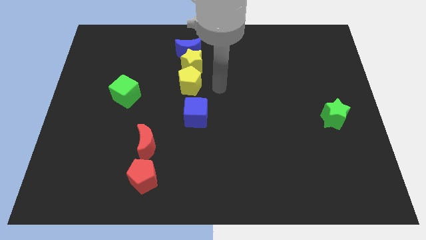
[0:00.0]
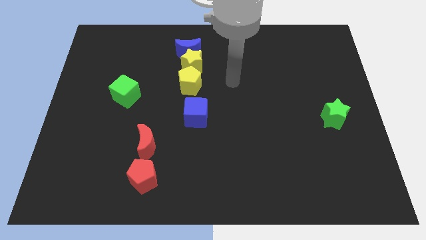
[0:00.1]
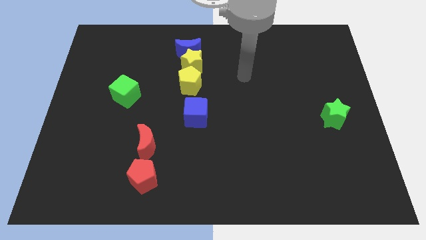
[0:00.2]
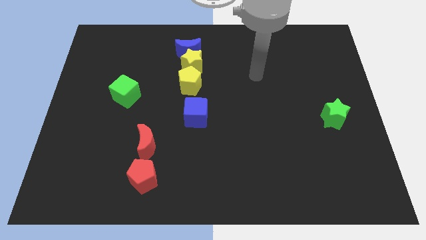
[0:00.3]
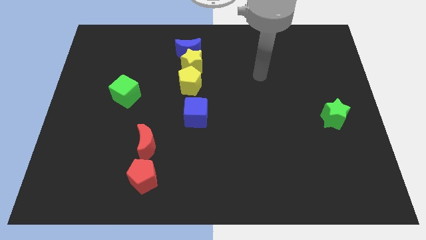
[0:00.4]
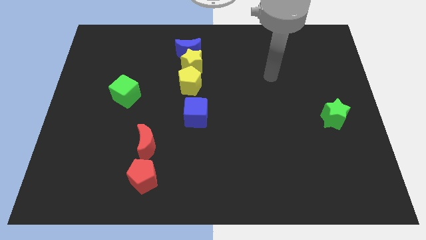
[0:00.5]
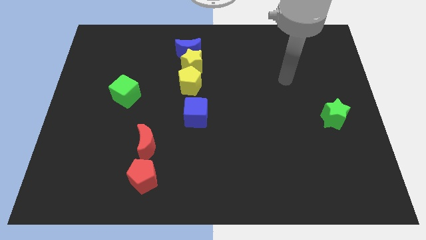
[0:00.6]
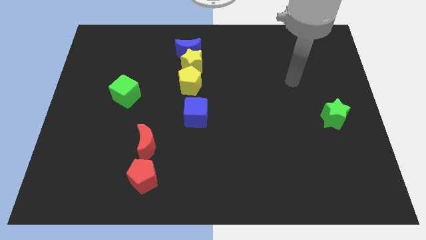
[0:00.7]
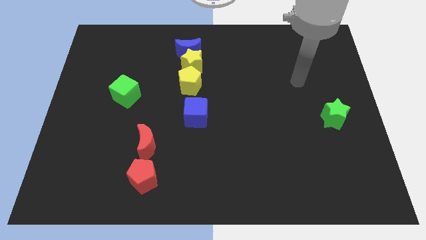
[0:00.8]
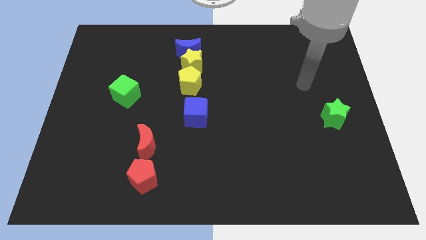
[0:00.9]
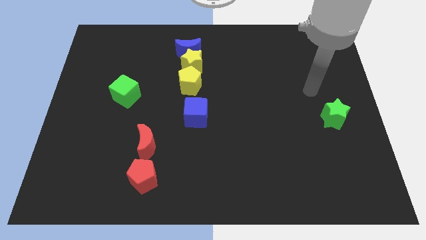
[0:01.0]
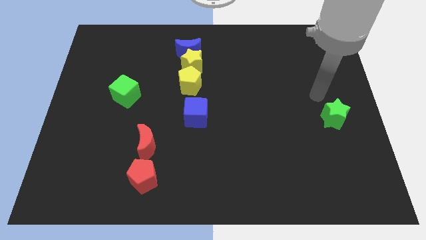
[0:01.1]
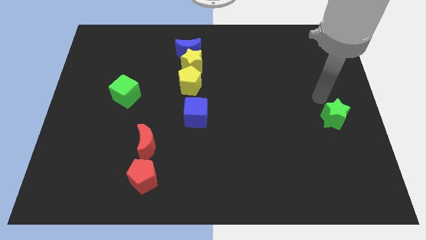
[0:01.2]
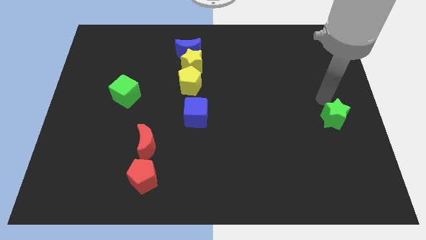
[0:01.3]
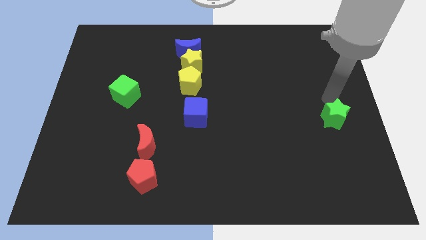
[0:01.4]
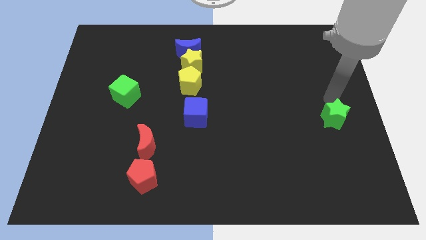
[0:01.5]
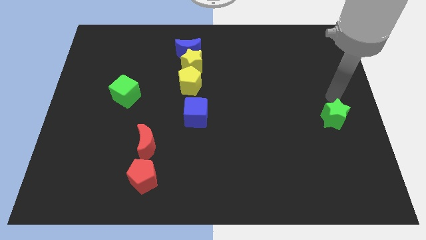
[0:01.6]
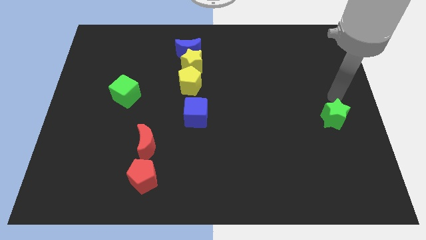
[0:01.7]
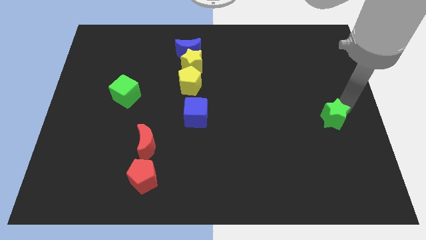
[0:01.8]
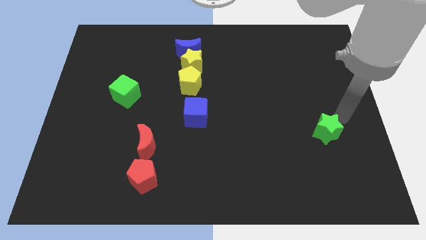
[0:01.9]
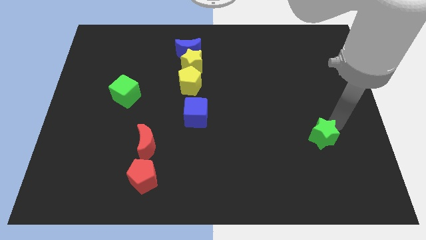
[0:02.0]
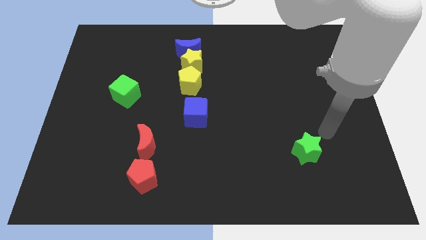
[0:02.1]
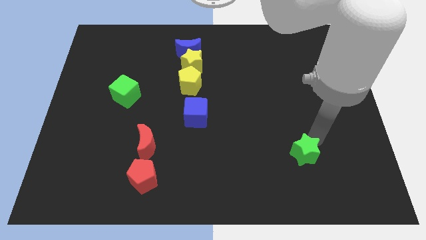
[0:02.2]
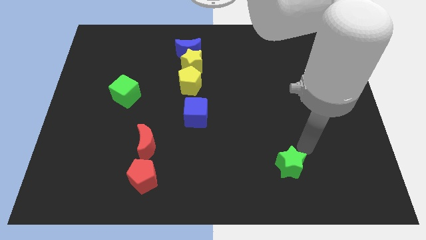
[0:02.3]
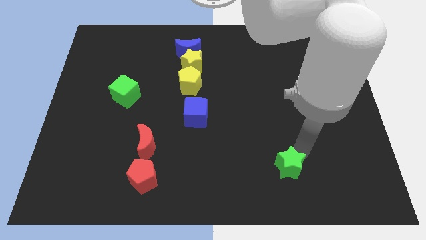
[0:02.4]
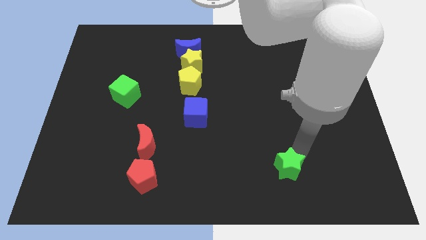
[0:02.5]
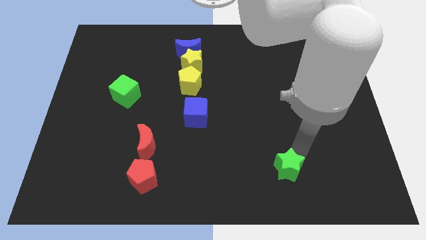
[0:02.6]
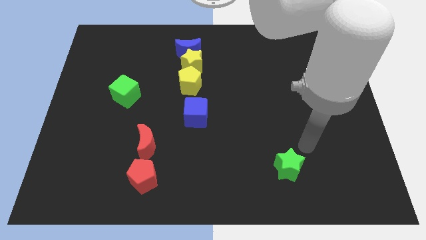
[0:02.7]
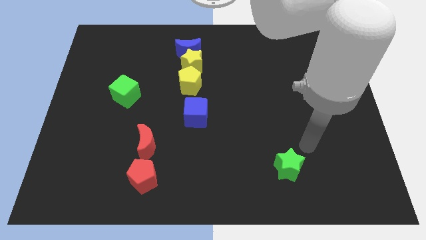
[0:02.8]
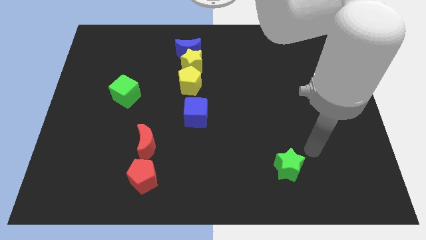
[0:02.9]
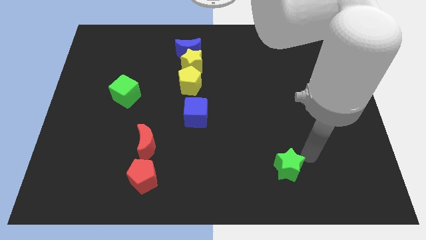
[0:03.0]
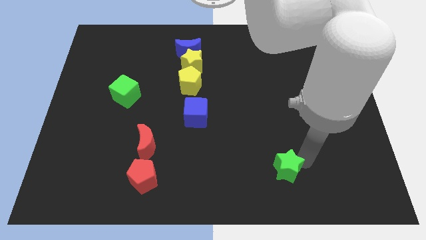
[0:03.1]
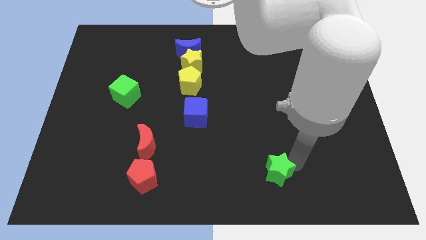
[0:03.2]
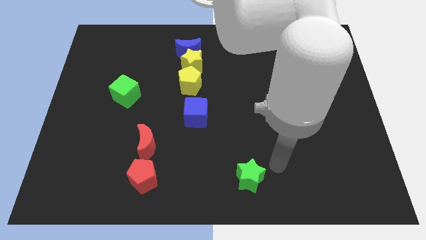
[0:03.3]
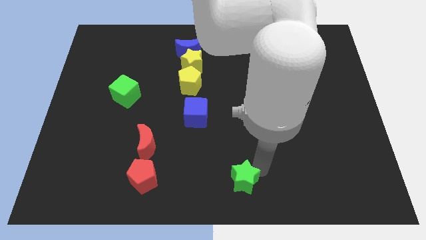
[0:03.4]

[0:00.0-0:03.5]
push the green star towards the bottom center of the board

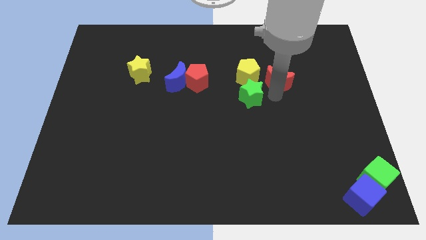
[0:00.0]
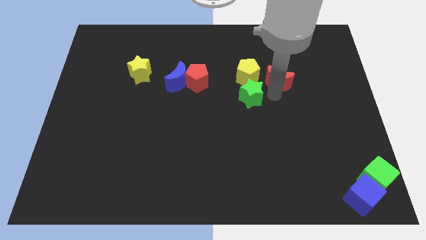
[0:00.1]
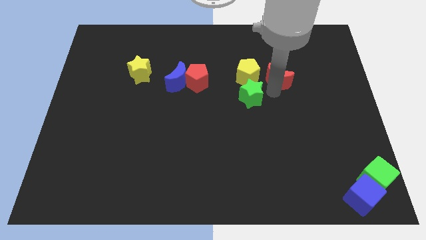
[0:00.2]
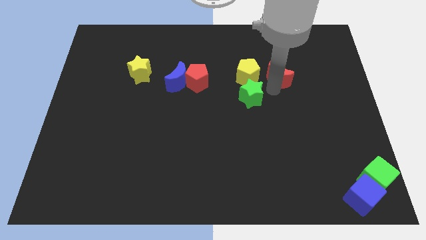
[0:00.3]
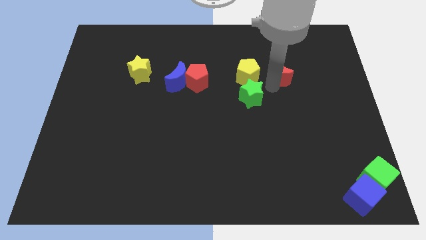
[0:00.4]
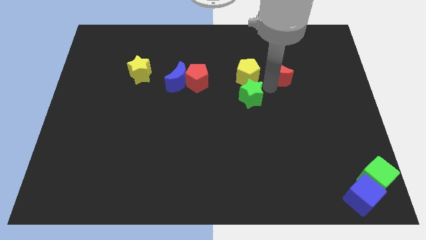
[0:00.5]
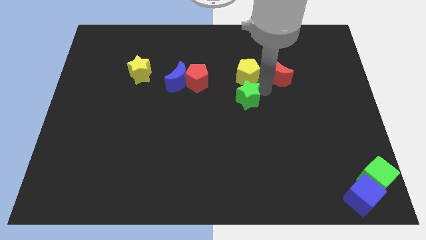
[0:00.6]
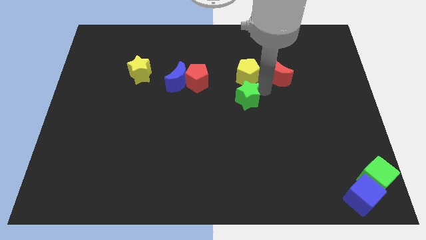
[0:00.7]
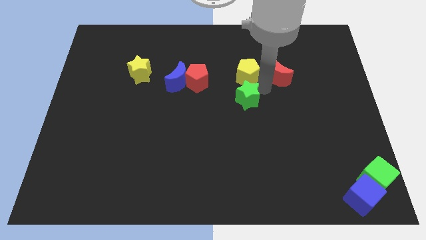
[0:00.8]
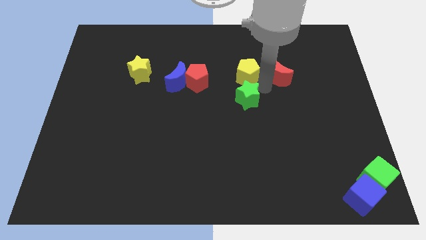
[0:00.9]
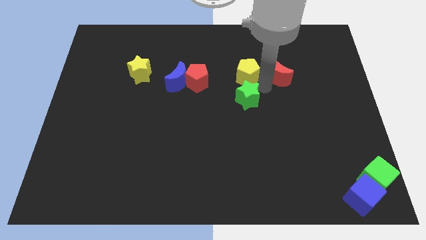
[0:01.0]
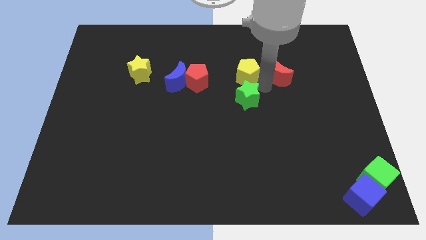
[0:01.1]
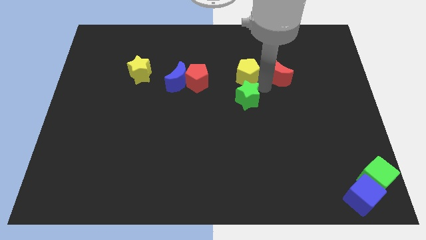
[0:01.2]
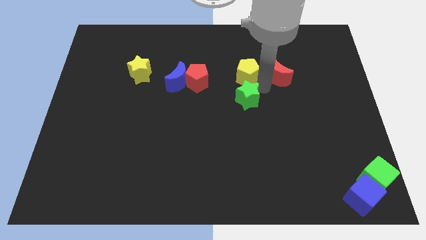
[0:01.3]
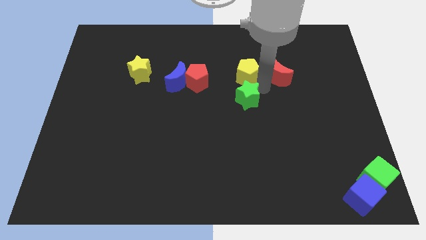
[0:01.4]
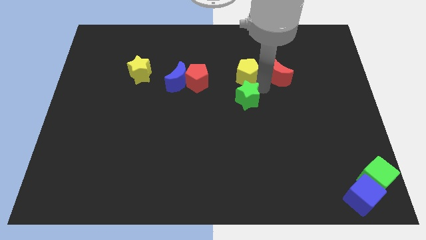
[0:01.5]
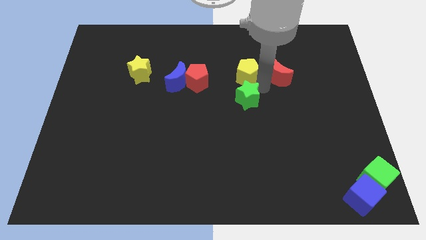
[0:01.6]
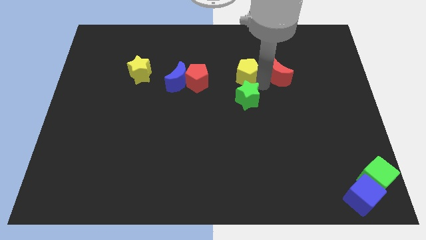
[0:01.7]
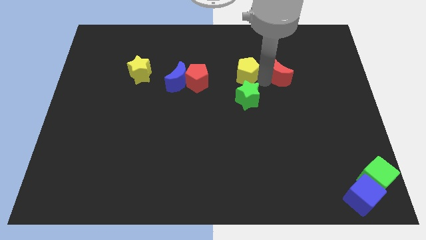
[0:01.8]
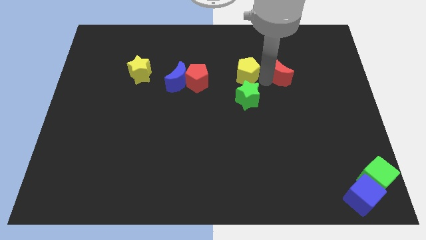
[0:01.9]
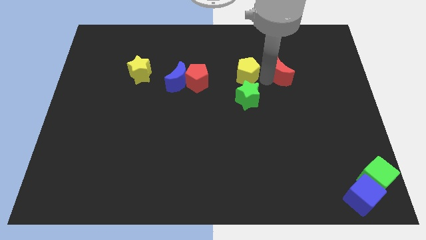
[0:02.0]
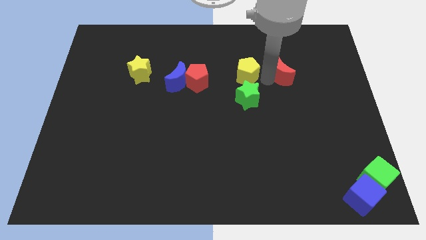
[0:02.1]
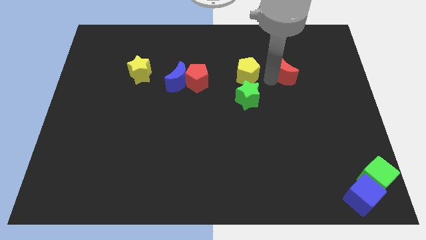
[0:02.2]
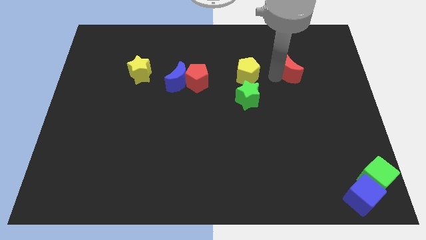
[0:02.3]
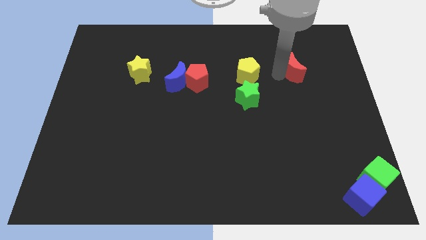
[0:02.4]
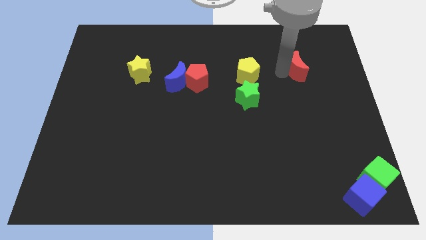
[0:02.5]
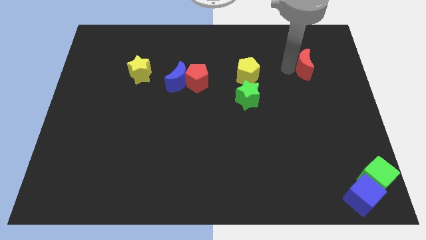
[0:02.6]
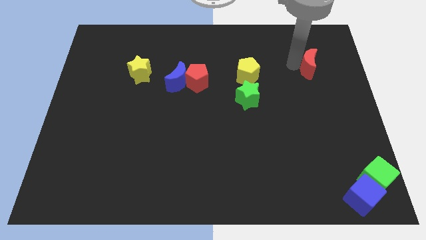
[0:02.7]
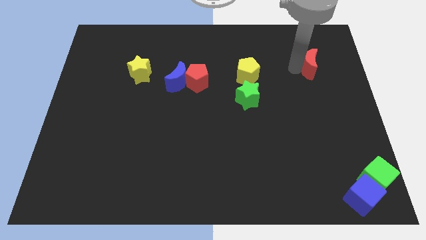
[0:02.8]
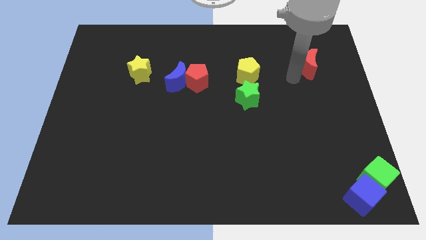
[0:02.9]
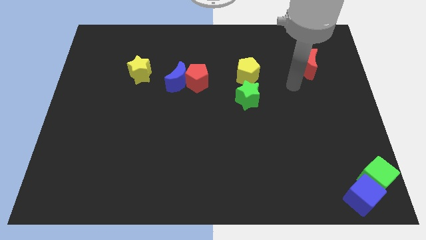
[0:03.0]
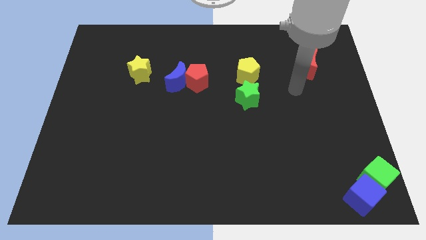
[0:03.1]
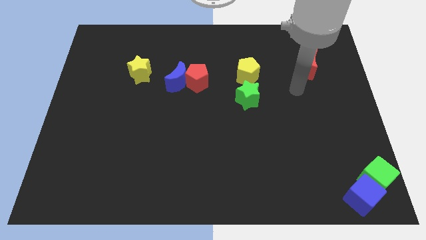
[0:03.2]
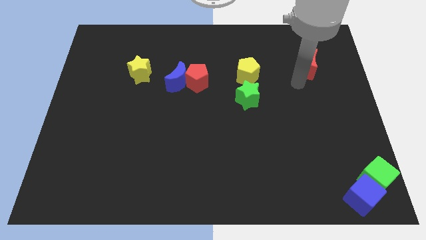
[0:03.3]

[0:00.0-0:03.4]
move the red moon to the right side of the board

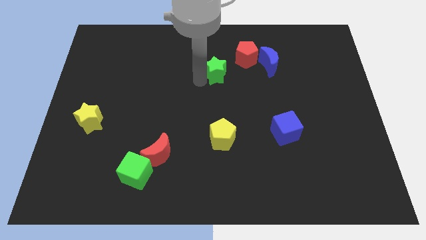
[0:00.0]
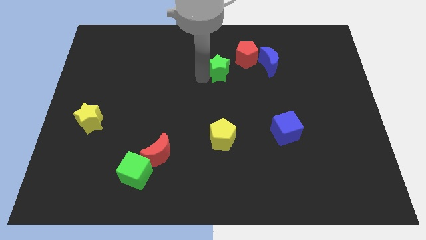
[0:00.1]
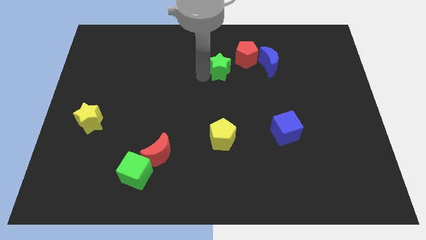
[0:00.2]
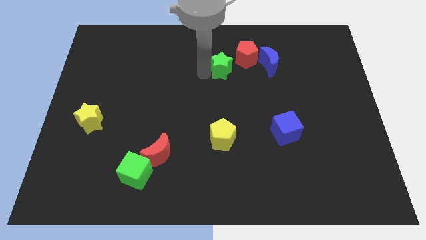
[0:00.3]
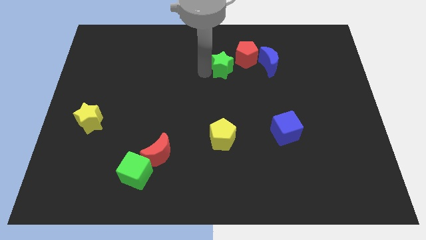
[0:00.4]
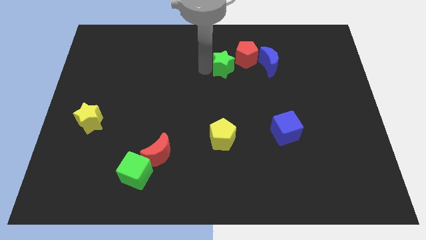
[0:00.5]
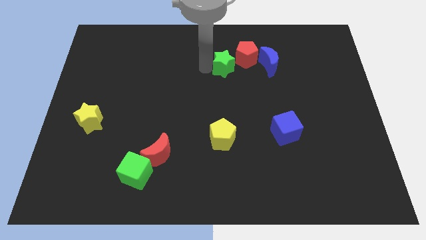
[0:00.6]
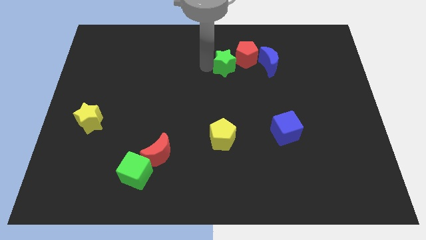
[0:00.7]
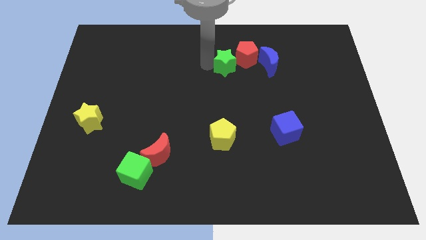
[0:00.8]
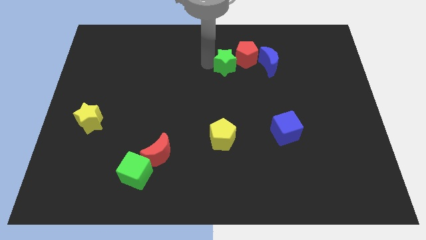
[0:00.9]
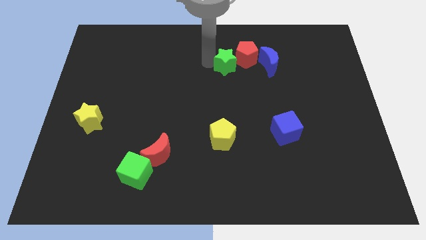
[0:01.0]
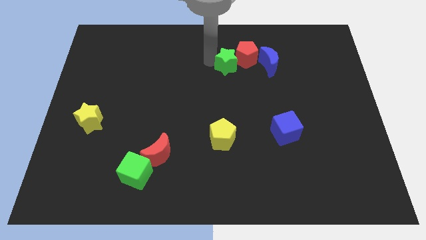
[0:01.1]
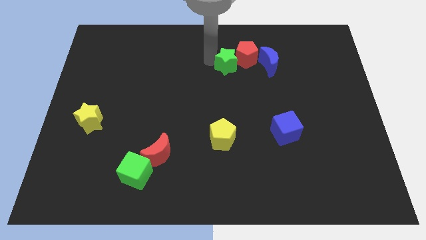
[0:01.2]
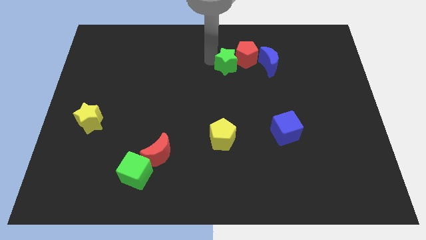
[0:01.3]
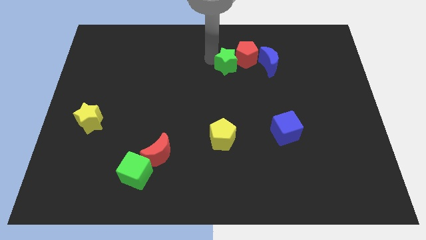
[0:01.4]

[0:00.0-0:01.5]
make the green star to touch the red pentagon

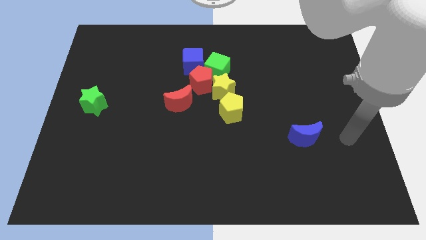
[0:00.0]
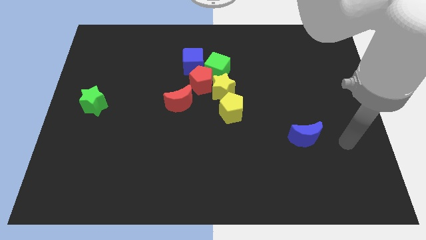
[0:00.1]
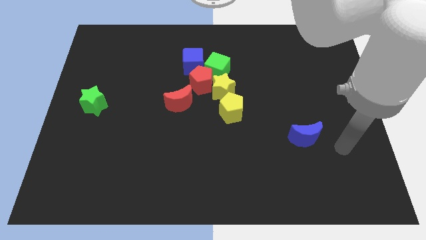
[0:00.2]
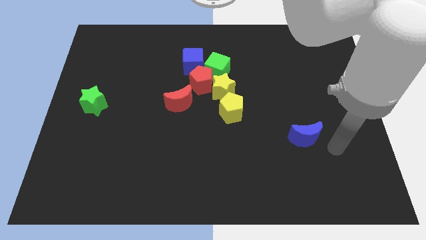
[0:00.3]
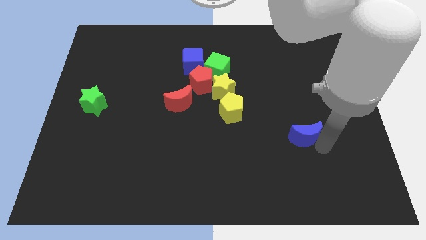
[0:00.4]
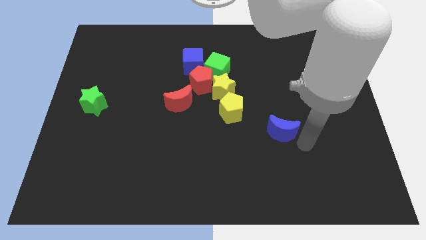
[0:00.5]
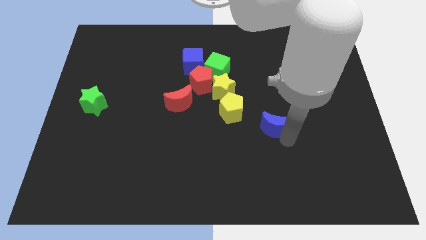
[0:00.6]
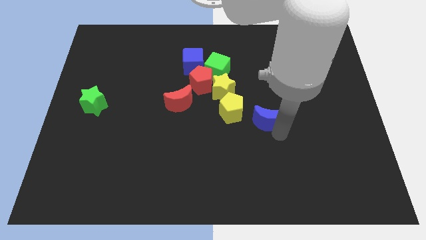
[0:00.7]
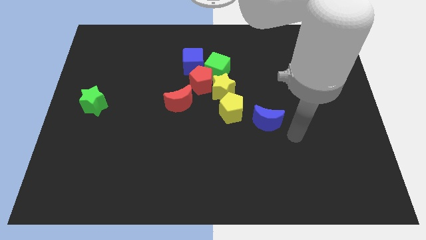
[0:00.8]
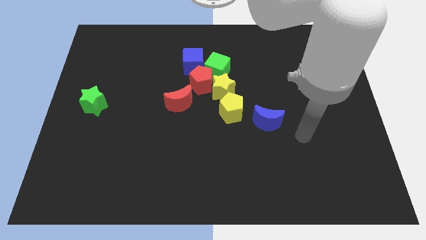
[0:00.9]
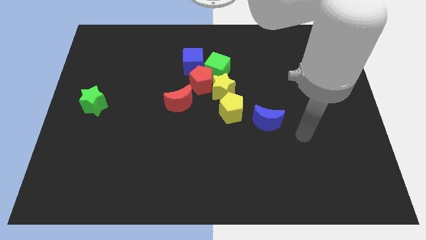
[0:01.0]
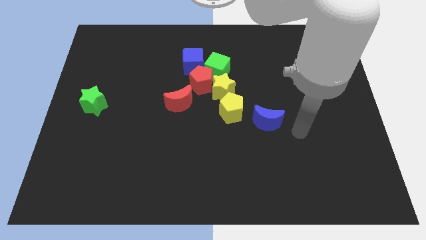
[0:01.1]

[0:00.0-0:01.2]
slightly move the blue crescent towards the center of the board
